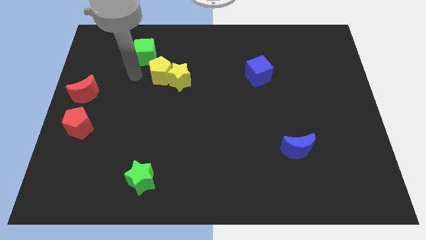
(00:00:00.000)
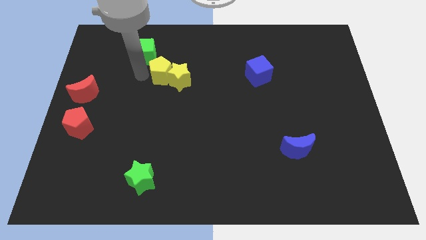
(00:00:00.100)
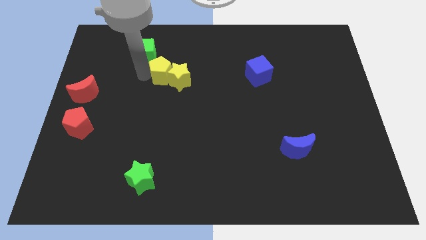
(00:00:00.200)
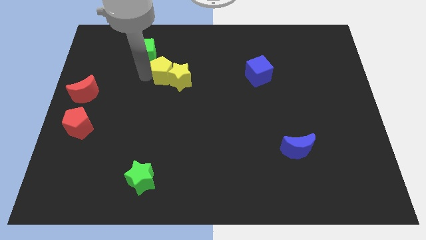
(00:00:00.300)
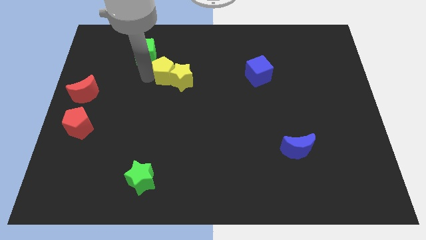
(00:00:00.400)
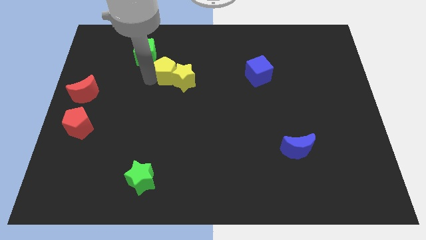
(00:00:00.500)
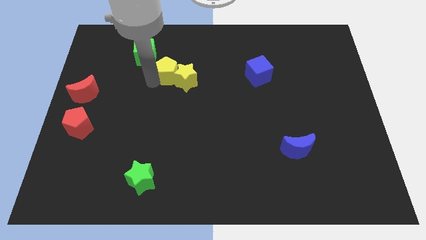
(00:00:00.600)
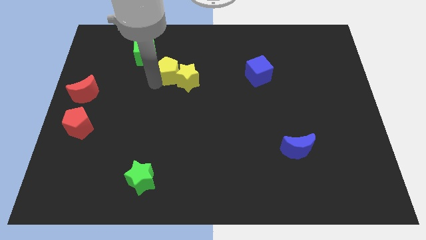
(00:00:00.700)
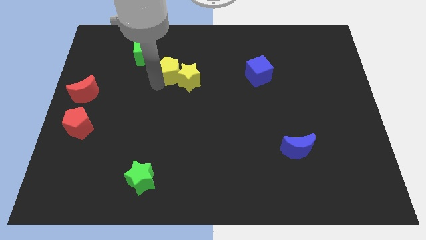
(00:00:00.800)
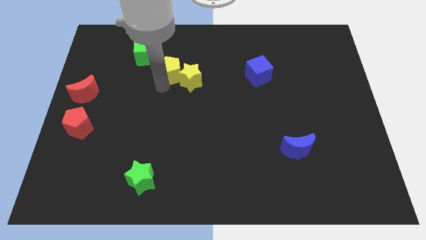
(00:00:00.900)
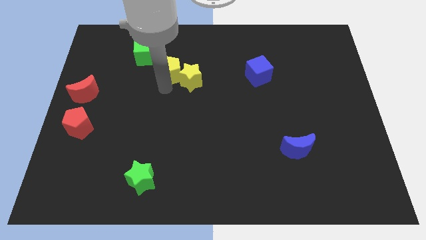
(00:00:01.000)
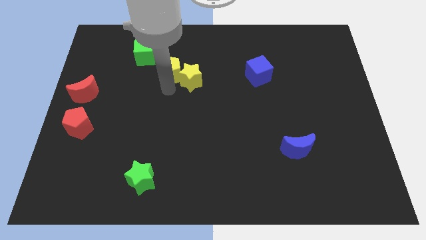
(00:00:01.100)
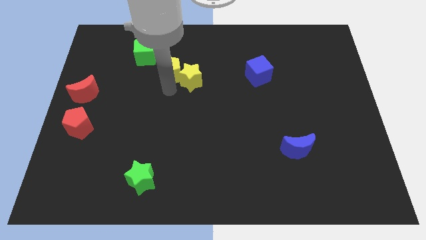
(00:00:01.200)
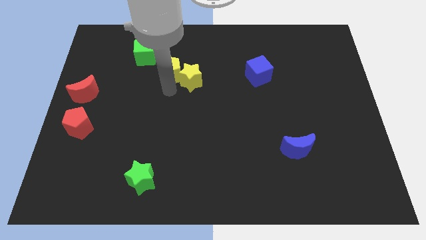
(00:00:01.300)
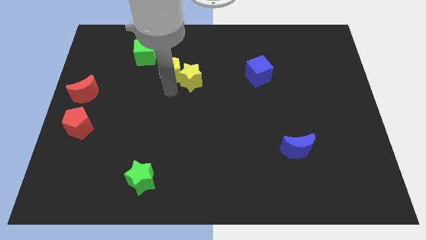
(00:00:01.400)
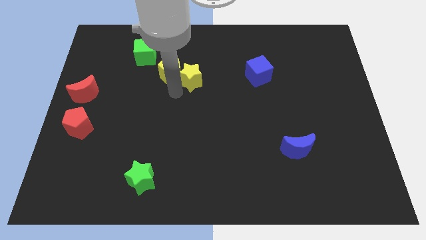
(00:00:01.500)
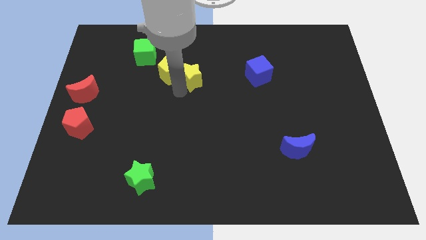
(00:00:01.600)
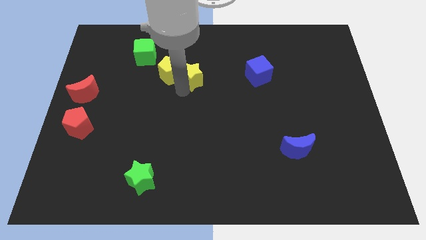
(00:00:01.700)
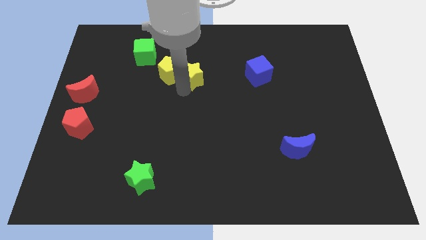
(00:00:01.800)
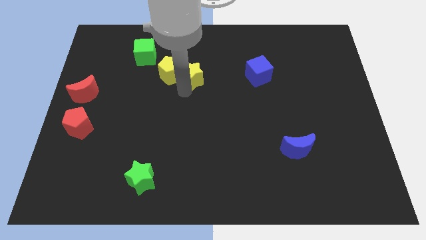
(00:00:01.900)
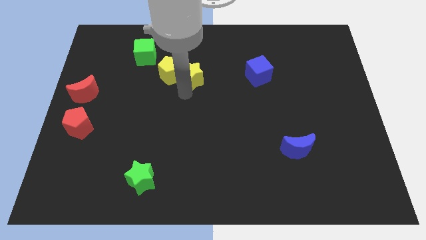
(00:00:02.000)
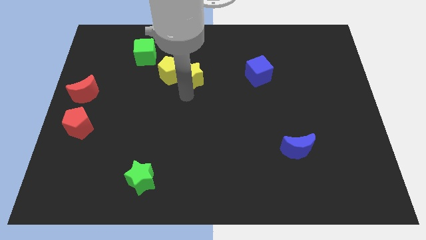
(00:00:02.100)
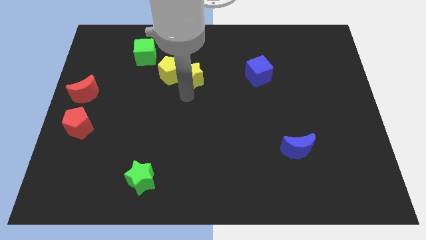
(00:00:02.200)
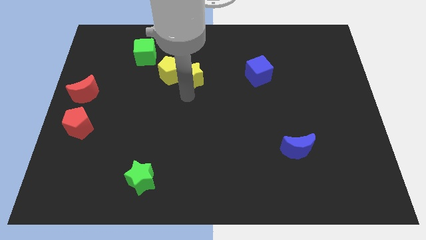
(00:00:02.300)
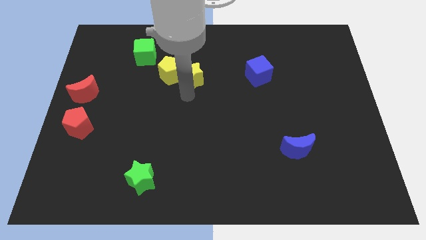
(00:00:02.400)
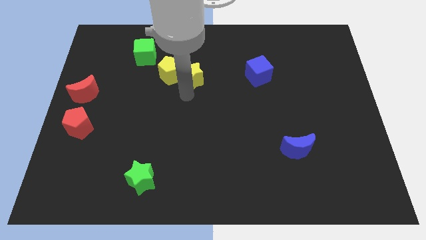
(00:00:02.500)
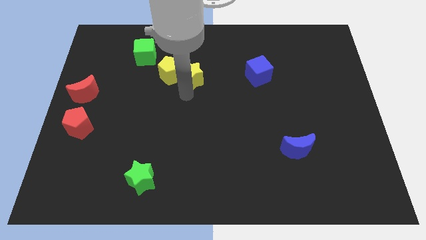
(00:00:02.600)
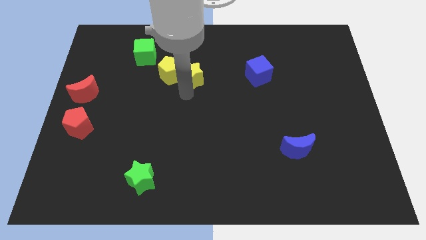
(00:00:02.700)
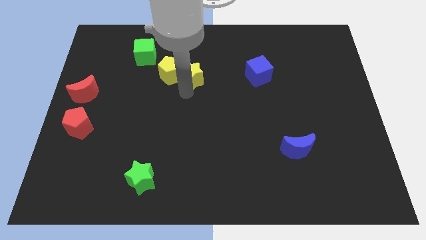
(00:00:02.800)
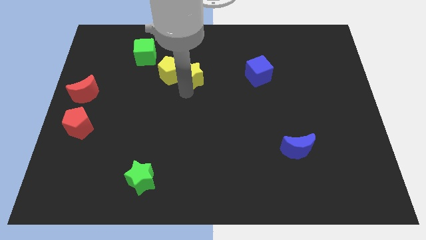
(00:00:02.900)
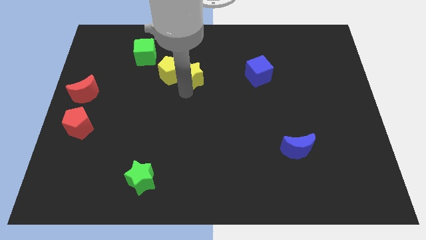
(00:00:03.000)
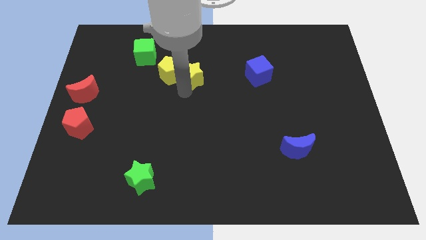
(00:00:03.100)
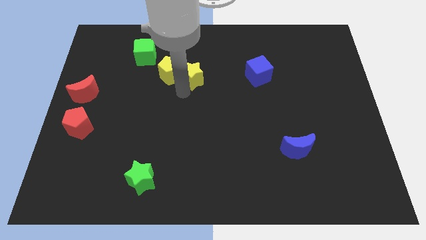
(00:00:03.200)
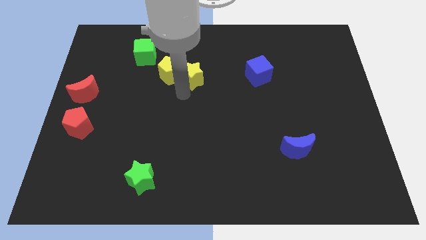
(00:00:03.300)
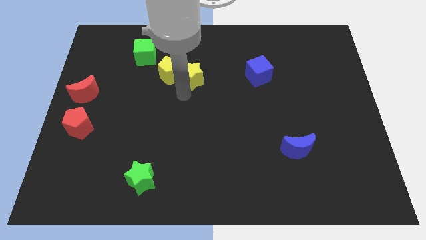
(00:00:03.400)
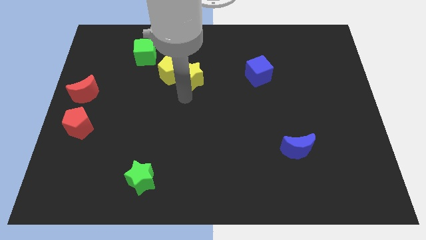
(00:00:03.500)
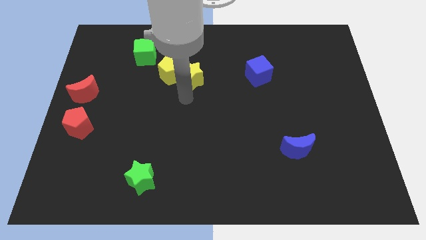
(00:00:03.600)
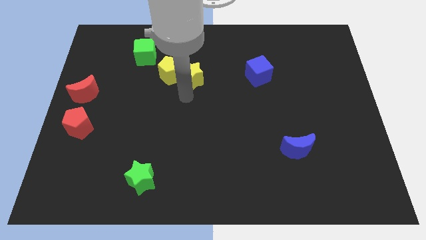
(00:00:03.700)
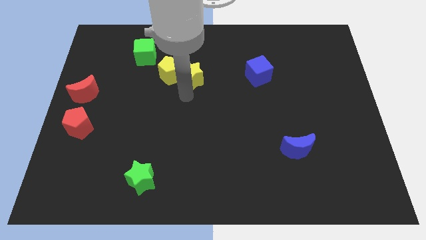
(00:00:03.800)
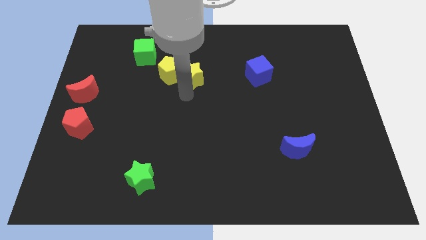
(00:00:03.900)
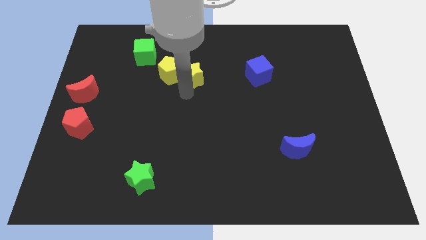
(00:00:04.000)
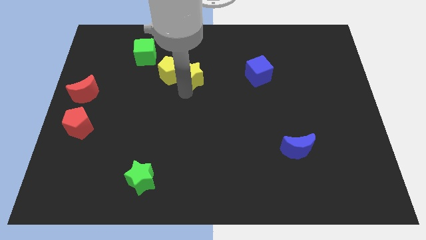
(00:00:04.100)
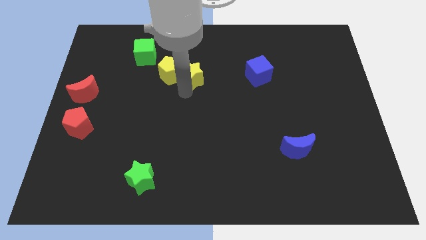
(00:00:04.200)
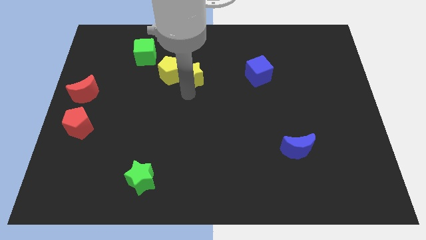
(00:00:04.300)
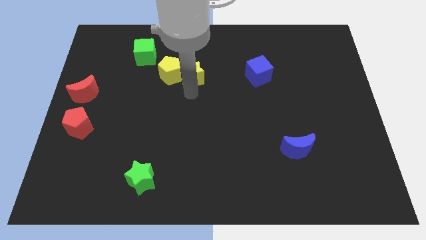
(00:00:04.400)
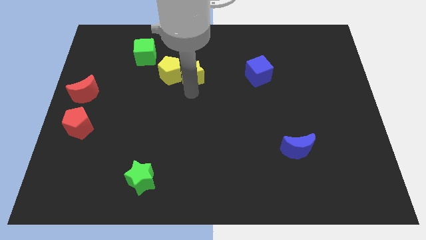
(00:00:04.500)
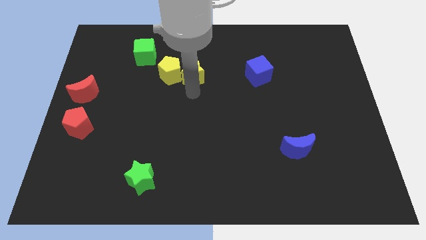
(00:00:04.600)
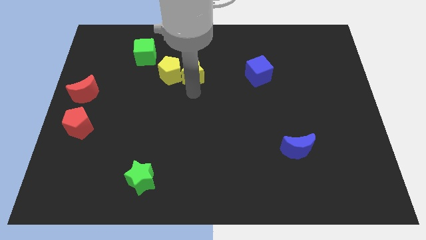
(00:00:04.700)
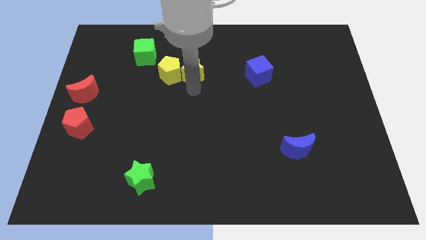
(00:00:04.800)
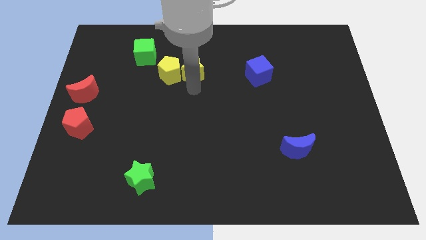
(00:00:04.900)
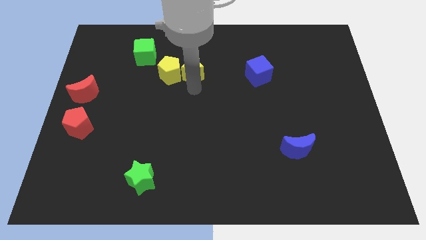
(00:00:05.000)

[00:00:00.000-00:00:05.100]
place the yellow star to the right side of the yellow pentagon

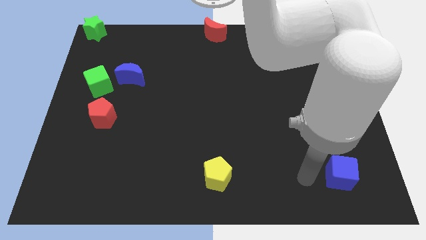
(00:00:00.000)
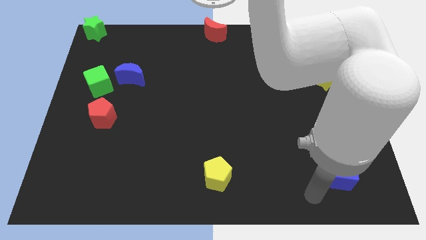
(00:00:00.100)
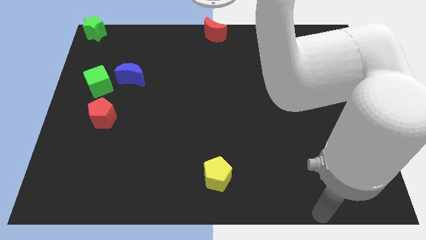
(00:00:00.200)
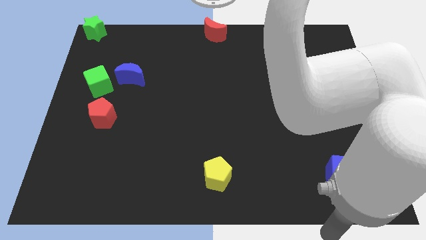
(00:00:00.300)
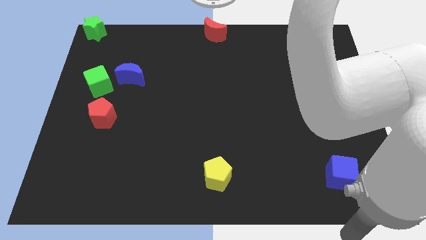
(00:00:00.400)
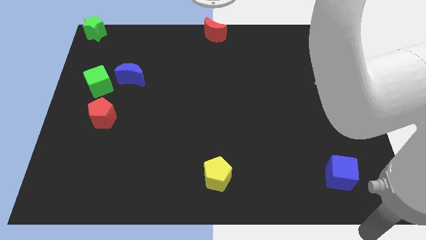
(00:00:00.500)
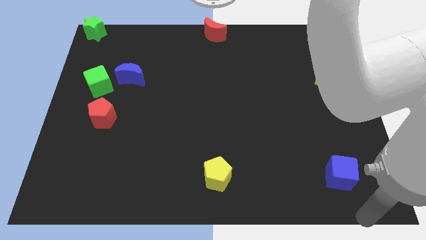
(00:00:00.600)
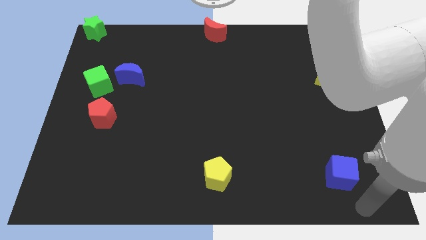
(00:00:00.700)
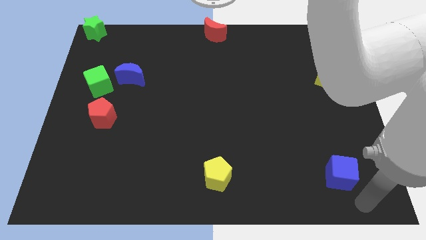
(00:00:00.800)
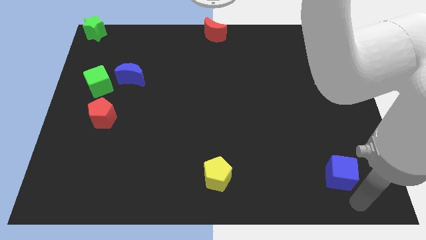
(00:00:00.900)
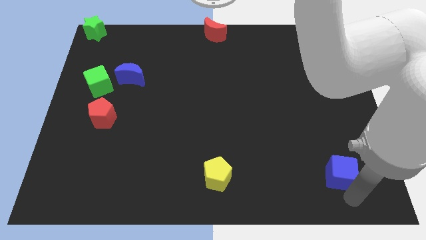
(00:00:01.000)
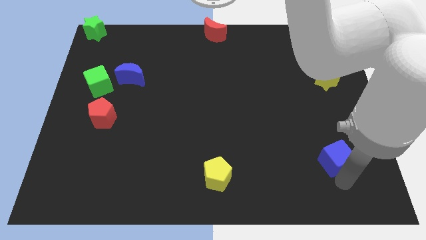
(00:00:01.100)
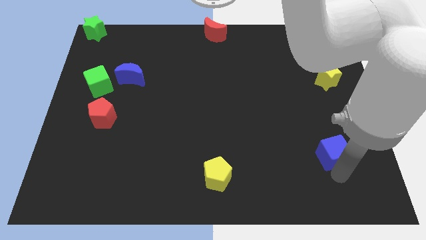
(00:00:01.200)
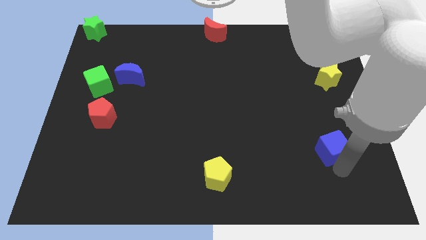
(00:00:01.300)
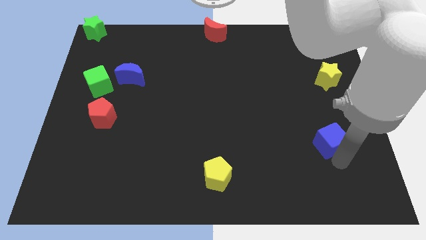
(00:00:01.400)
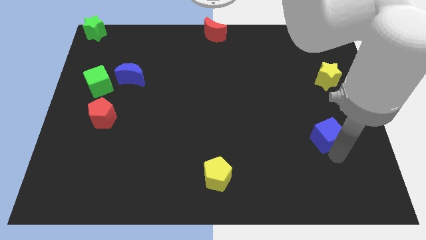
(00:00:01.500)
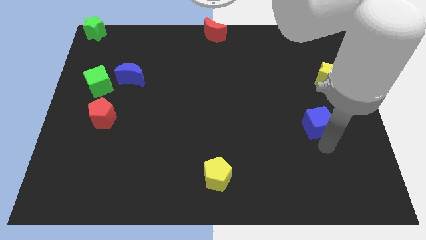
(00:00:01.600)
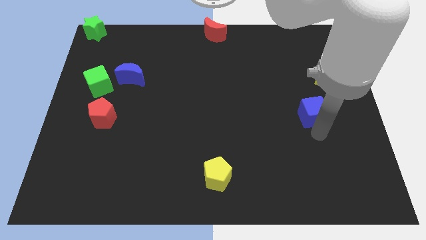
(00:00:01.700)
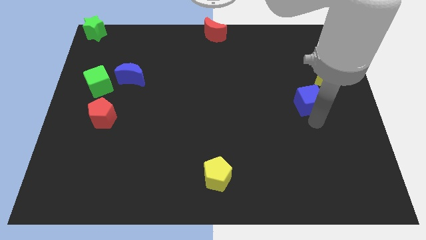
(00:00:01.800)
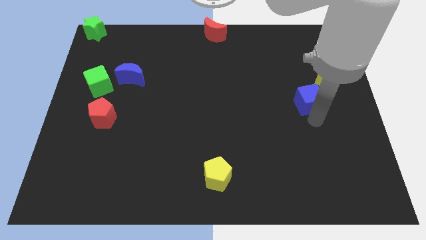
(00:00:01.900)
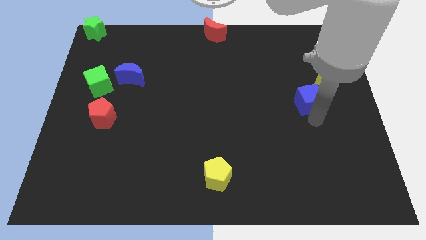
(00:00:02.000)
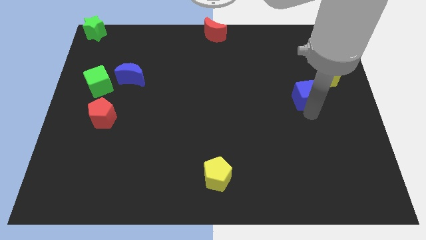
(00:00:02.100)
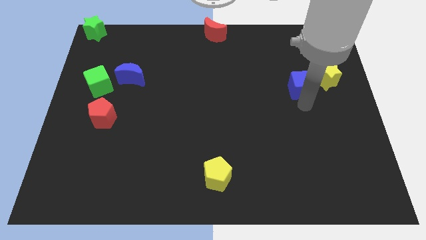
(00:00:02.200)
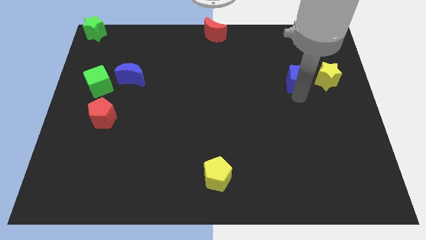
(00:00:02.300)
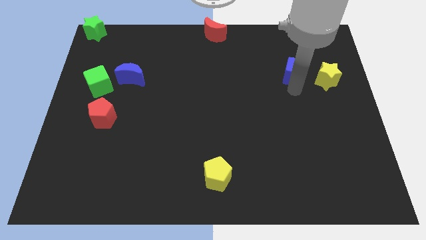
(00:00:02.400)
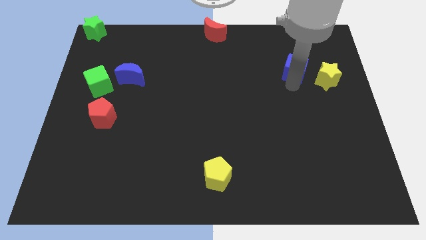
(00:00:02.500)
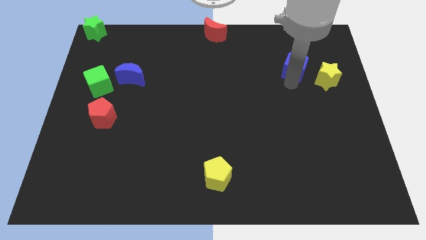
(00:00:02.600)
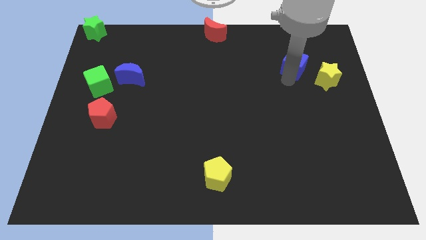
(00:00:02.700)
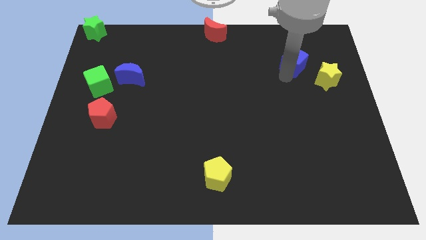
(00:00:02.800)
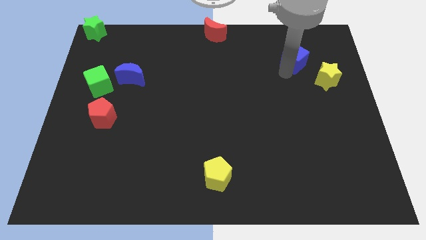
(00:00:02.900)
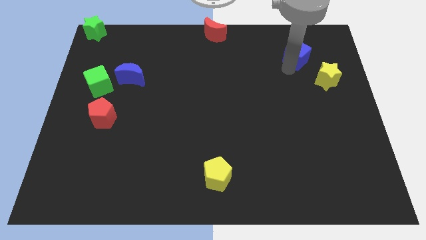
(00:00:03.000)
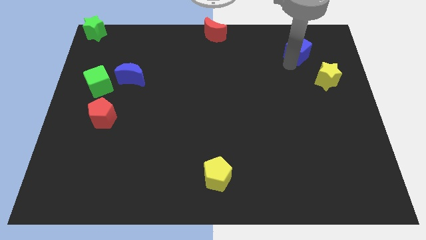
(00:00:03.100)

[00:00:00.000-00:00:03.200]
place the blue cube between the red moon and yellow star

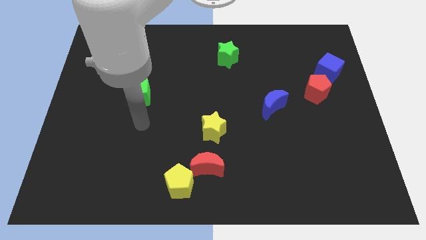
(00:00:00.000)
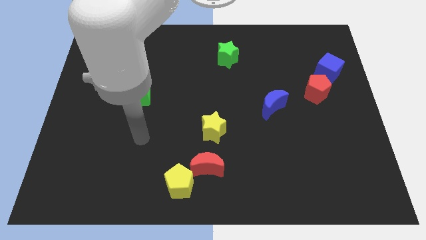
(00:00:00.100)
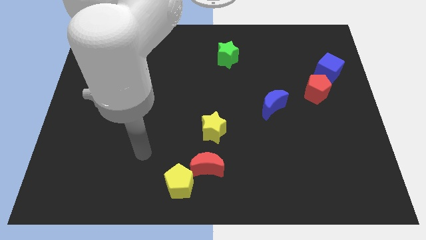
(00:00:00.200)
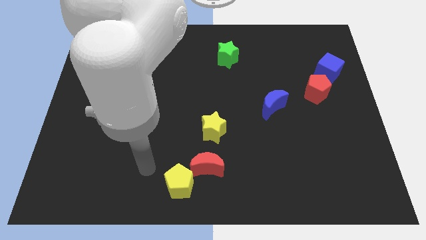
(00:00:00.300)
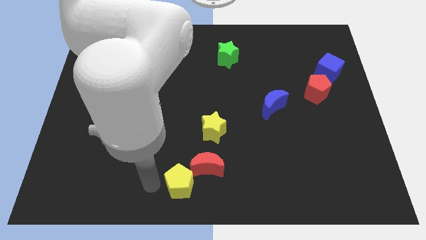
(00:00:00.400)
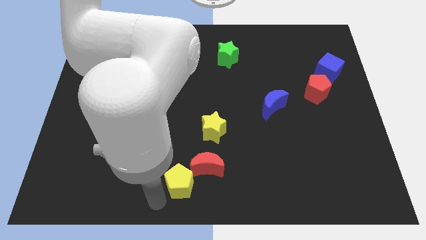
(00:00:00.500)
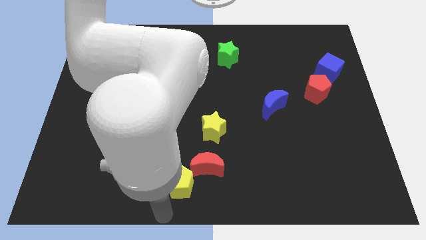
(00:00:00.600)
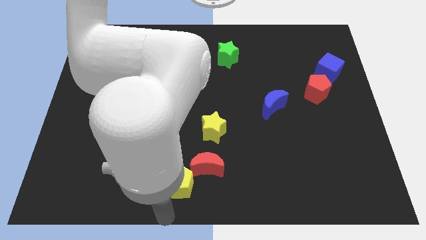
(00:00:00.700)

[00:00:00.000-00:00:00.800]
move your arm away from the green cube
